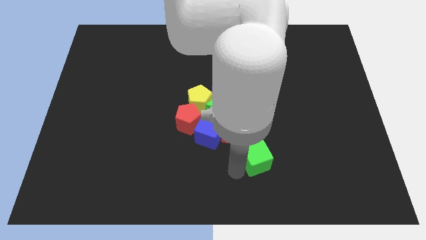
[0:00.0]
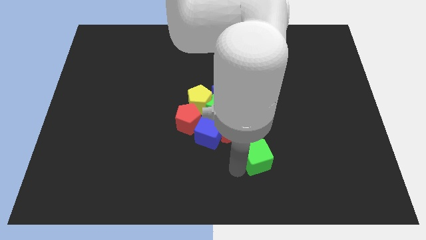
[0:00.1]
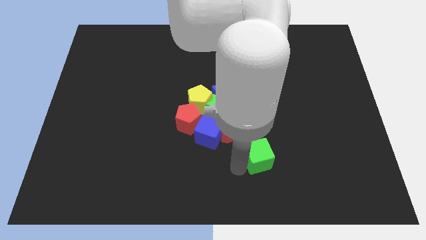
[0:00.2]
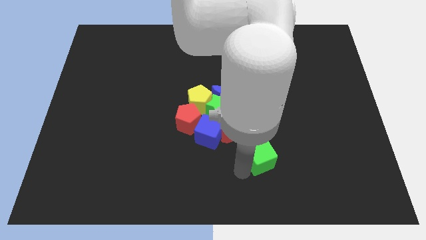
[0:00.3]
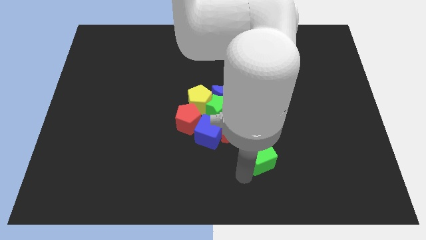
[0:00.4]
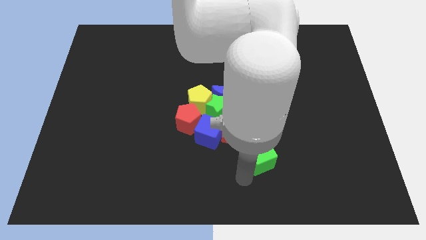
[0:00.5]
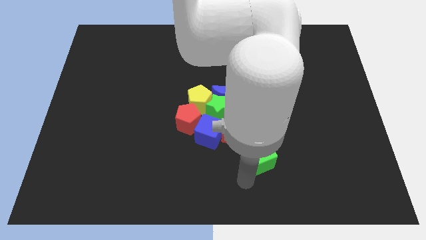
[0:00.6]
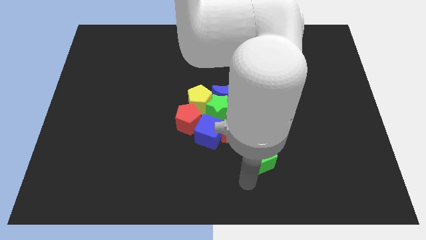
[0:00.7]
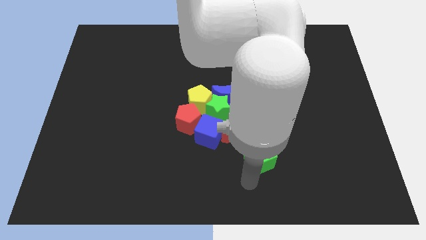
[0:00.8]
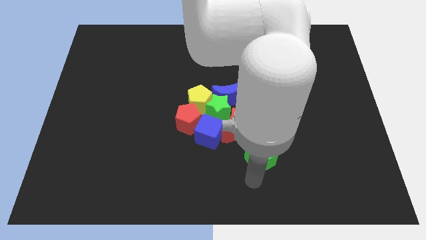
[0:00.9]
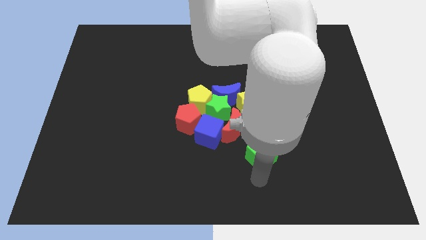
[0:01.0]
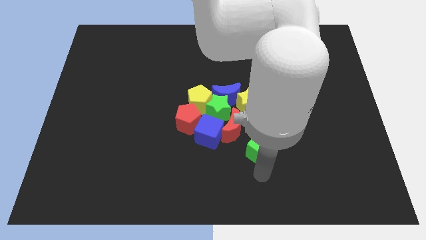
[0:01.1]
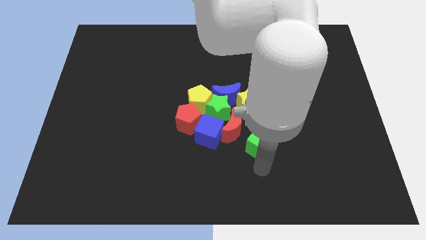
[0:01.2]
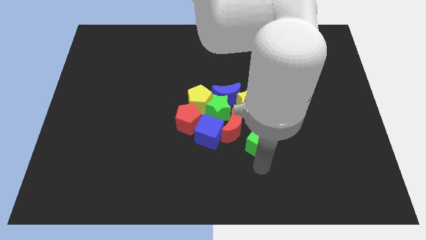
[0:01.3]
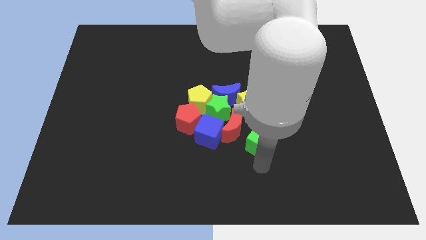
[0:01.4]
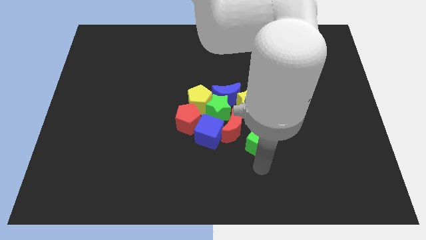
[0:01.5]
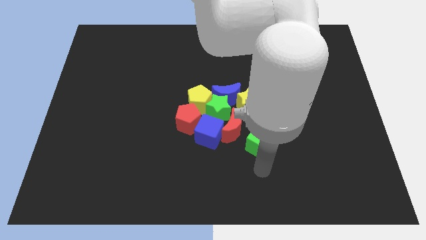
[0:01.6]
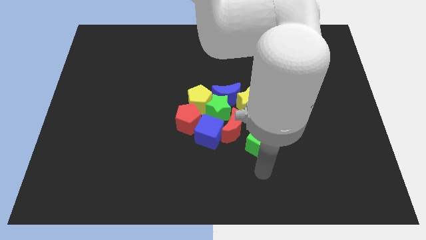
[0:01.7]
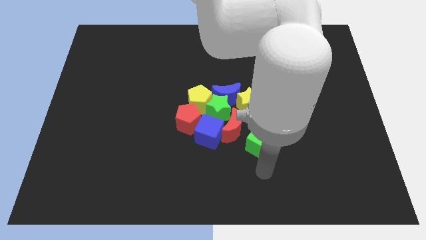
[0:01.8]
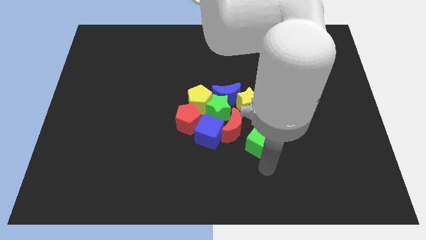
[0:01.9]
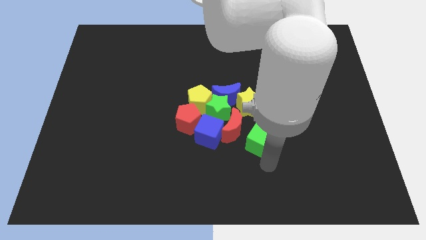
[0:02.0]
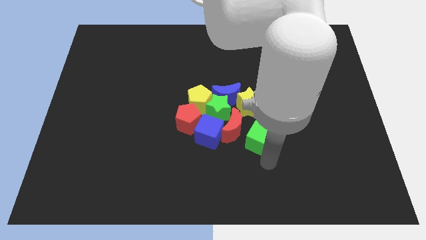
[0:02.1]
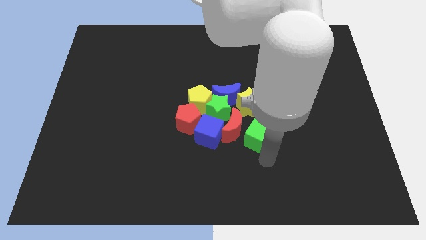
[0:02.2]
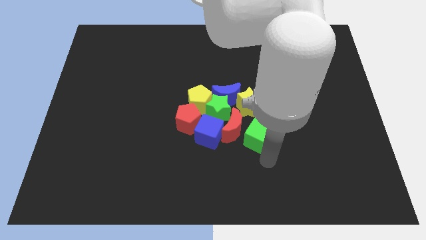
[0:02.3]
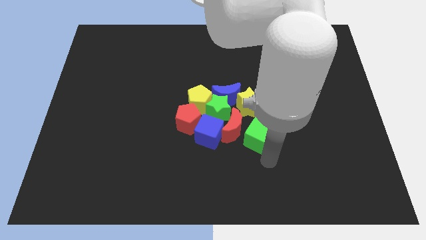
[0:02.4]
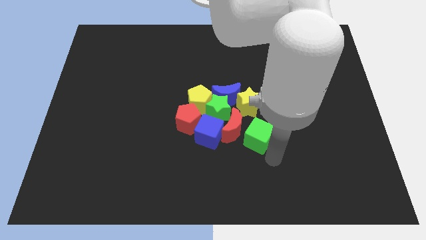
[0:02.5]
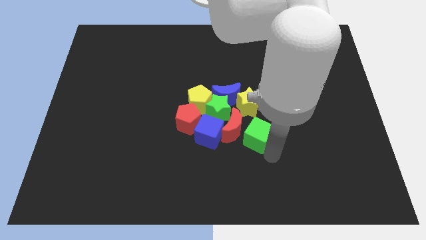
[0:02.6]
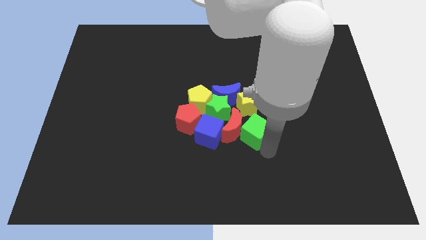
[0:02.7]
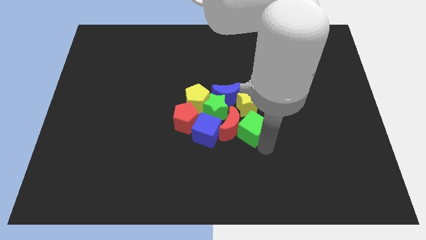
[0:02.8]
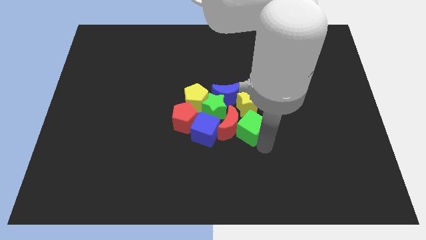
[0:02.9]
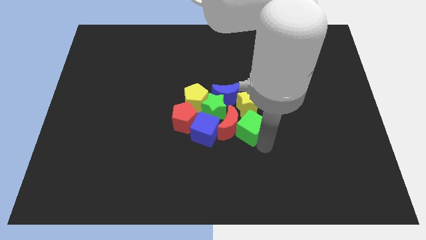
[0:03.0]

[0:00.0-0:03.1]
push the green cube towards the yellow star

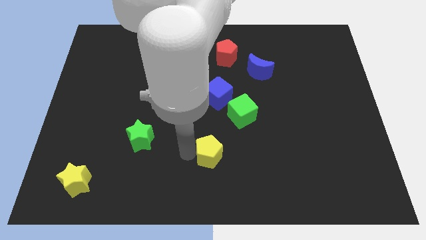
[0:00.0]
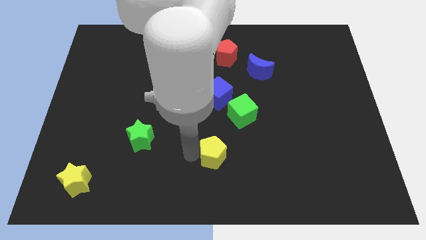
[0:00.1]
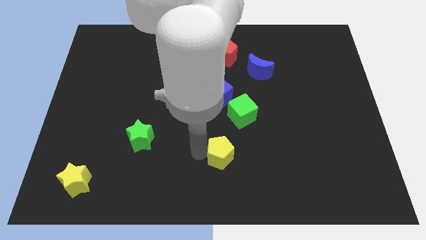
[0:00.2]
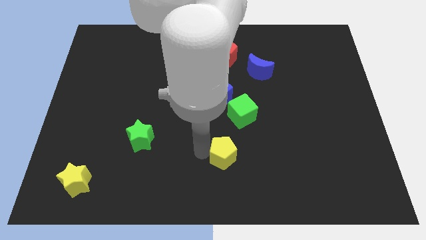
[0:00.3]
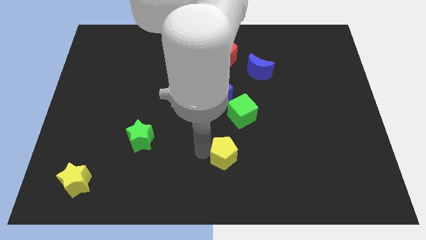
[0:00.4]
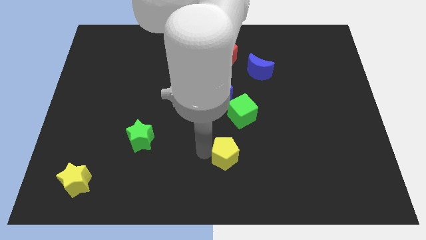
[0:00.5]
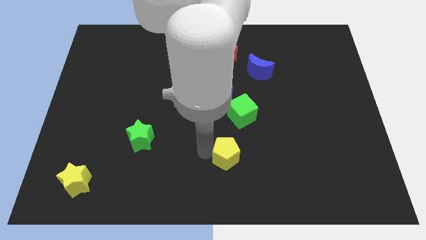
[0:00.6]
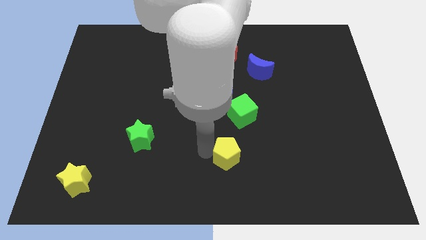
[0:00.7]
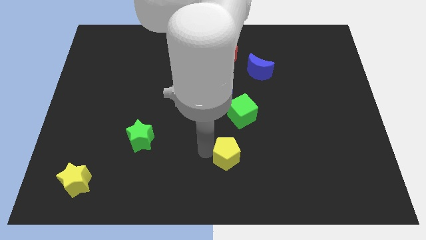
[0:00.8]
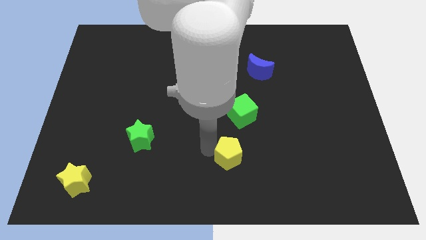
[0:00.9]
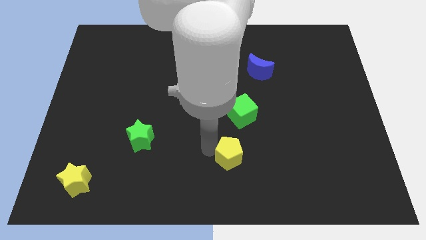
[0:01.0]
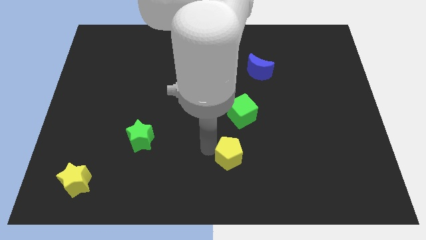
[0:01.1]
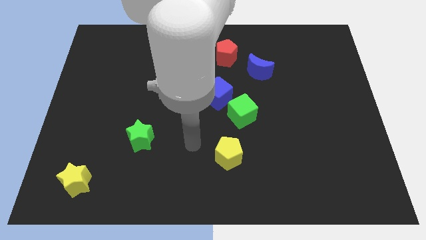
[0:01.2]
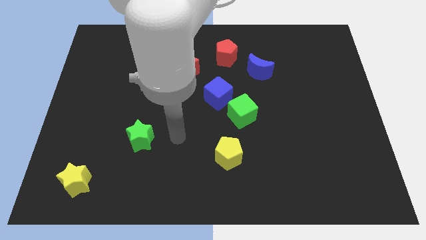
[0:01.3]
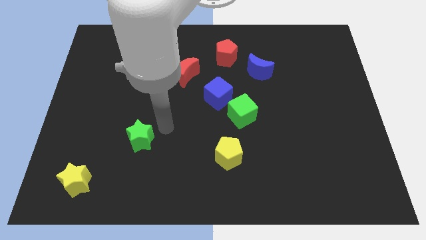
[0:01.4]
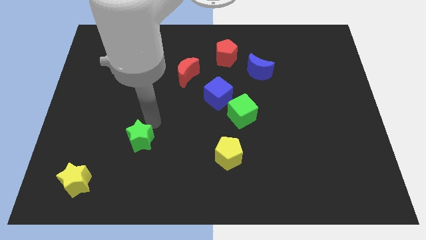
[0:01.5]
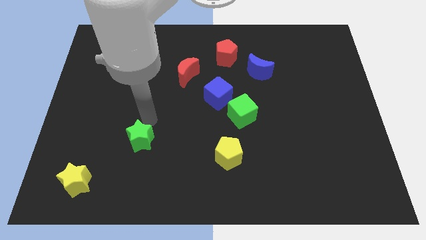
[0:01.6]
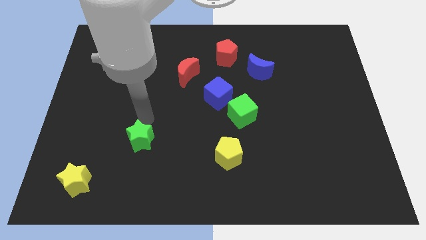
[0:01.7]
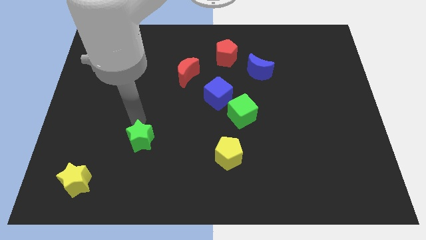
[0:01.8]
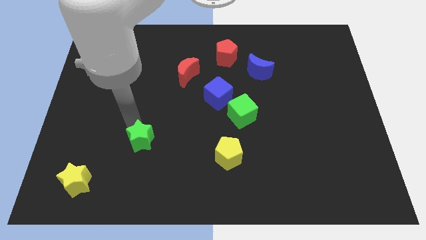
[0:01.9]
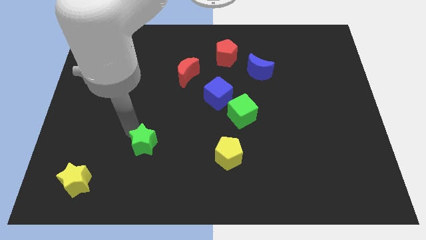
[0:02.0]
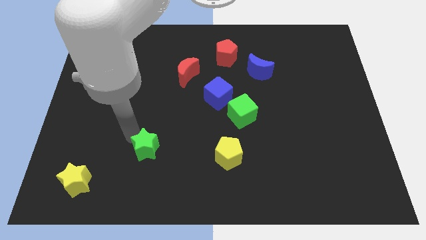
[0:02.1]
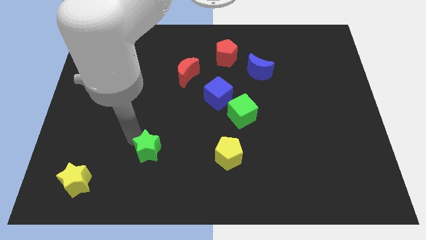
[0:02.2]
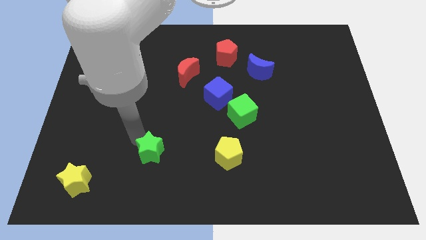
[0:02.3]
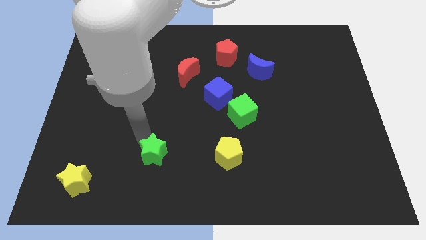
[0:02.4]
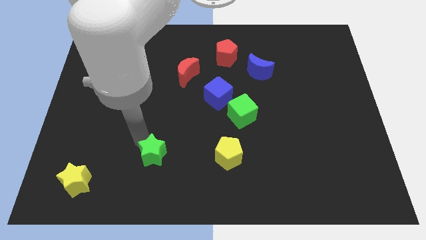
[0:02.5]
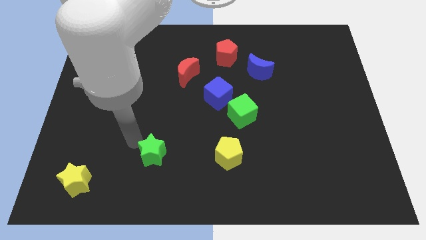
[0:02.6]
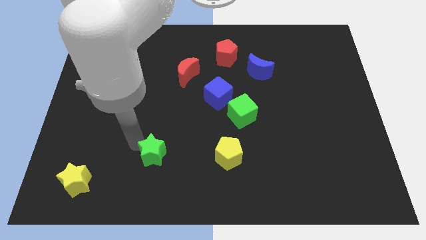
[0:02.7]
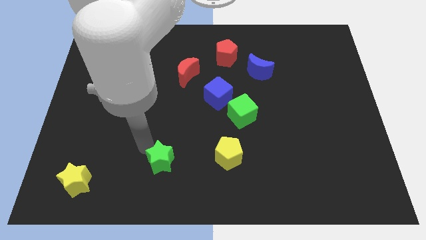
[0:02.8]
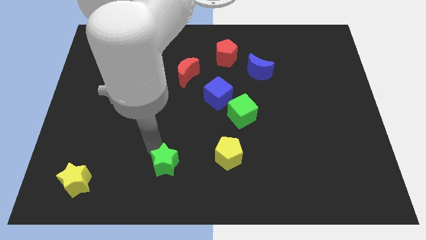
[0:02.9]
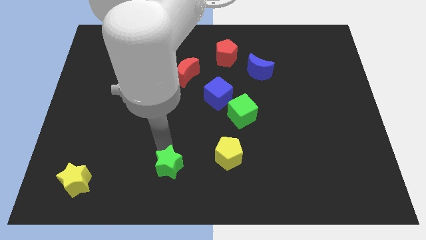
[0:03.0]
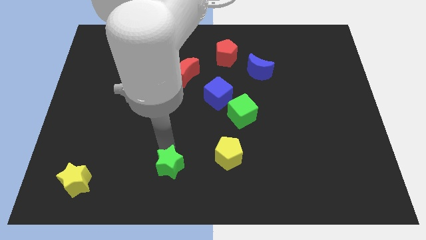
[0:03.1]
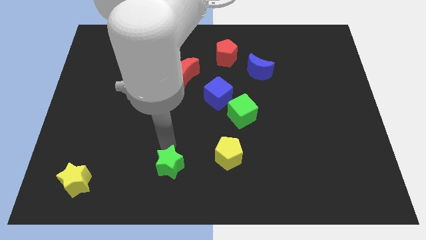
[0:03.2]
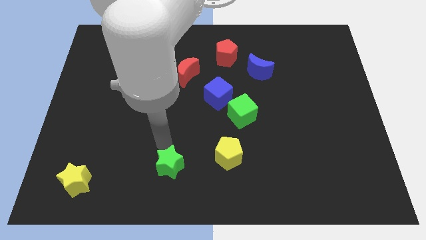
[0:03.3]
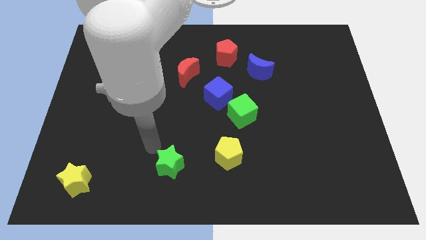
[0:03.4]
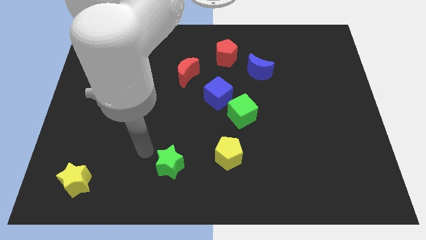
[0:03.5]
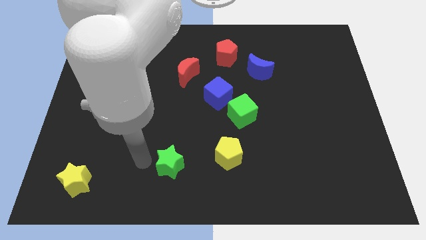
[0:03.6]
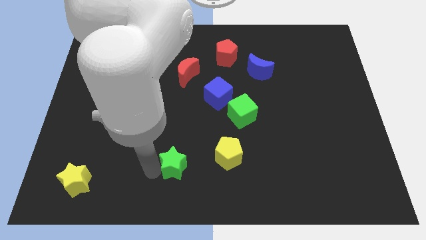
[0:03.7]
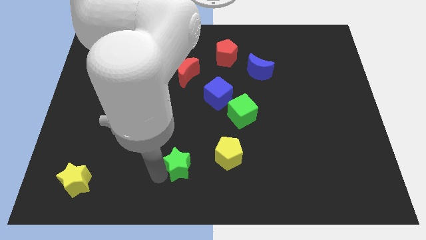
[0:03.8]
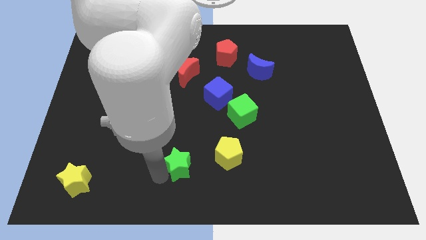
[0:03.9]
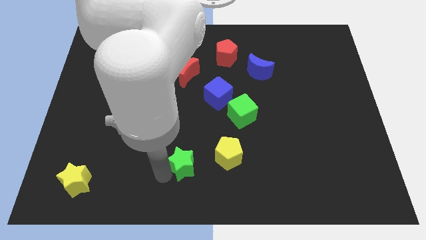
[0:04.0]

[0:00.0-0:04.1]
push the green star towards the left of the yellow pentagon

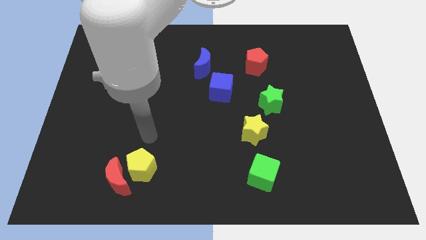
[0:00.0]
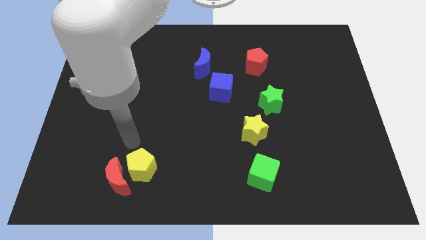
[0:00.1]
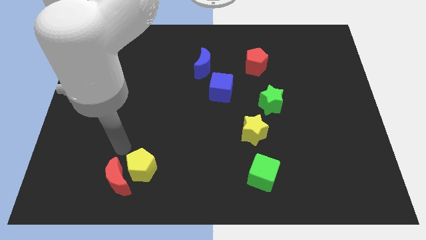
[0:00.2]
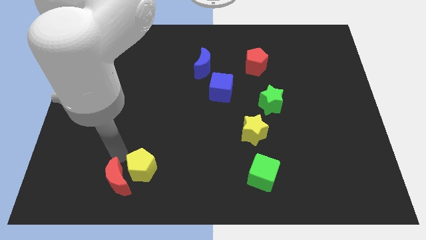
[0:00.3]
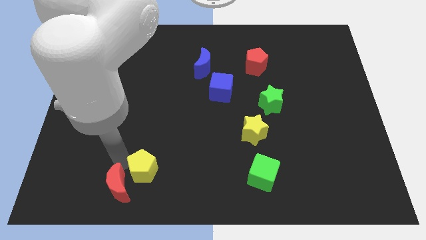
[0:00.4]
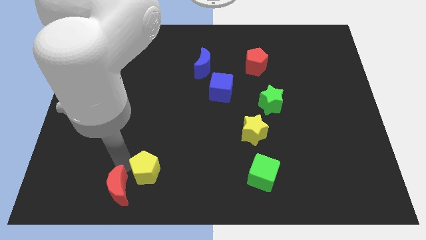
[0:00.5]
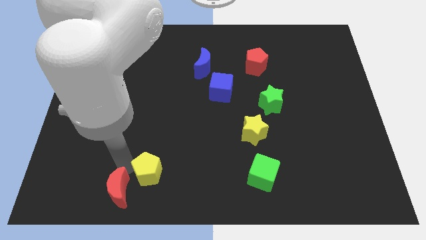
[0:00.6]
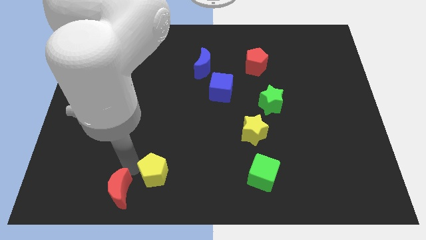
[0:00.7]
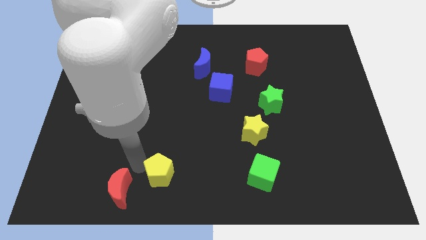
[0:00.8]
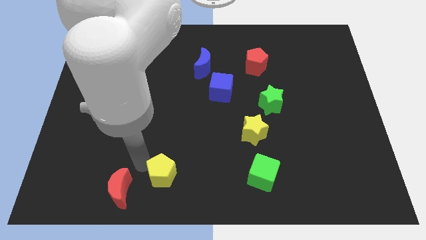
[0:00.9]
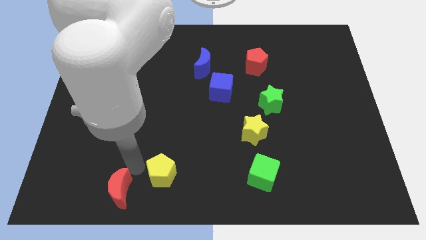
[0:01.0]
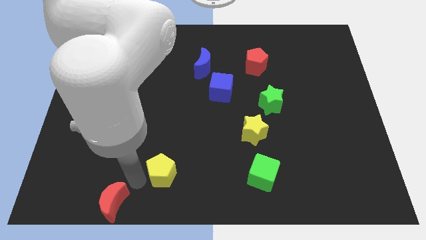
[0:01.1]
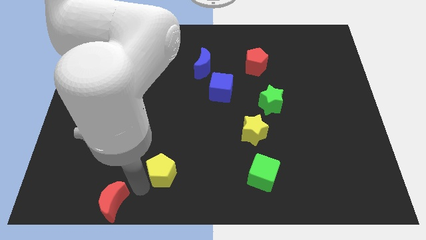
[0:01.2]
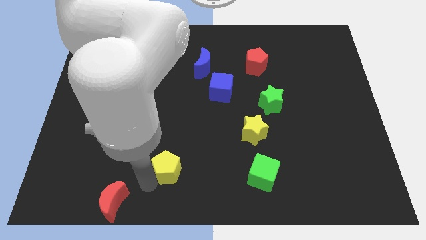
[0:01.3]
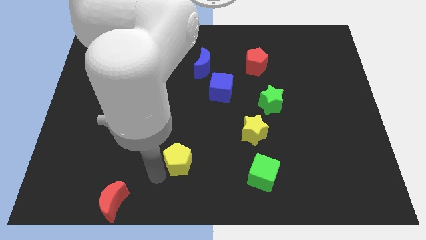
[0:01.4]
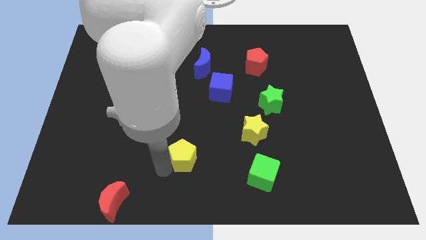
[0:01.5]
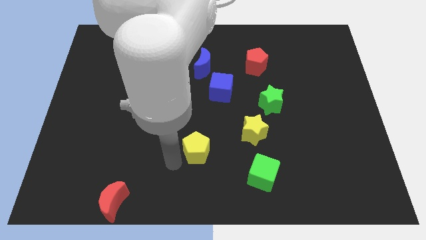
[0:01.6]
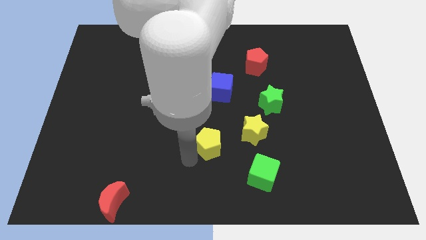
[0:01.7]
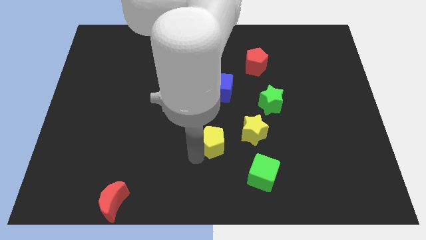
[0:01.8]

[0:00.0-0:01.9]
place the yellow pentagon below the blue cube
